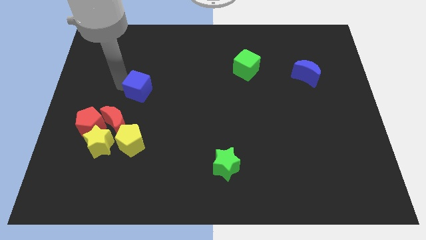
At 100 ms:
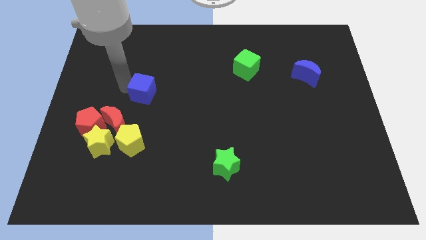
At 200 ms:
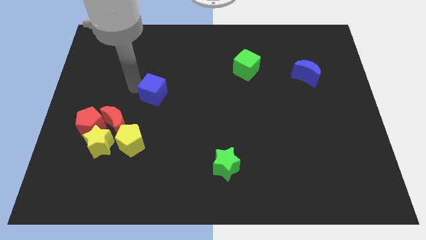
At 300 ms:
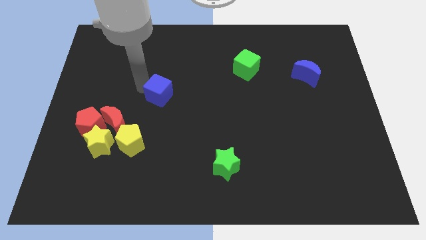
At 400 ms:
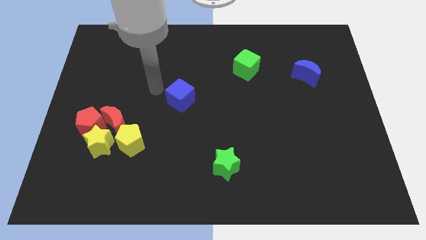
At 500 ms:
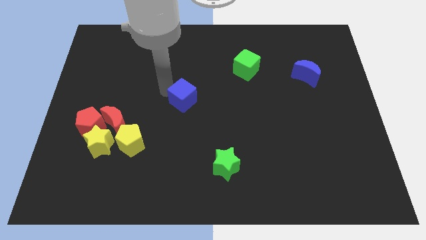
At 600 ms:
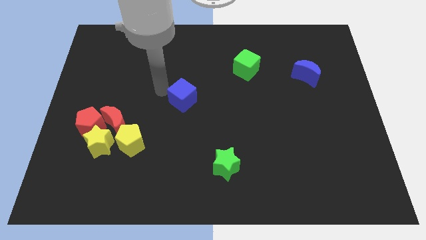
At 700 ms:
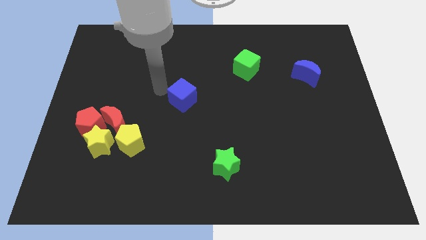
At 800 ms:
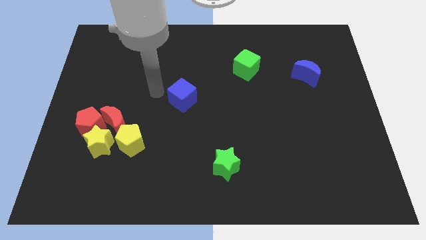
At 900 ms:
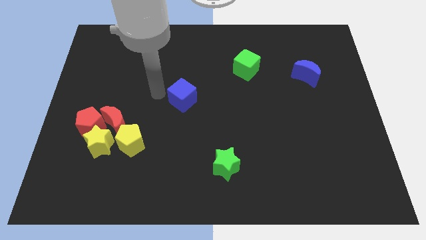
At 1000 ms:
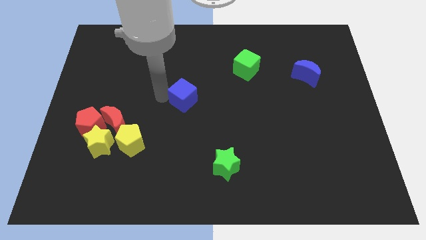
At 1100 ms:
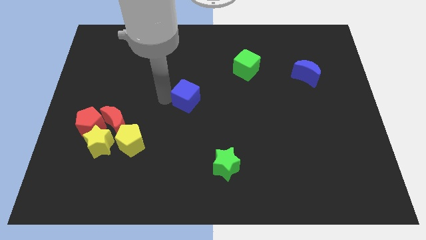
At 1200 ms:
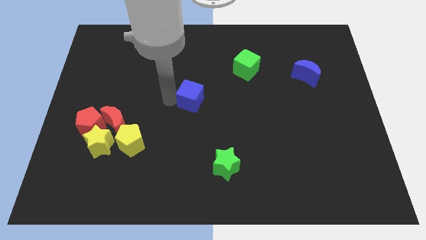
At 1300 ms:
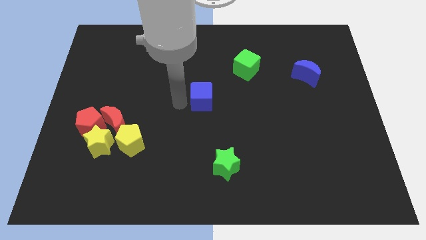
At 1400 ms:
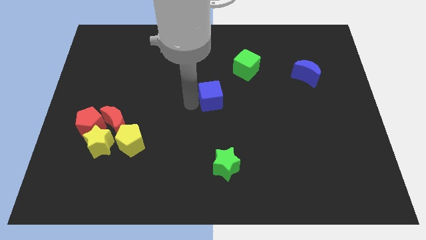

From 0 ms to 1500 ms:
push the blue cube to the center of the board

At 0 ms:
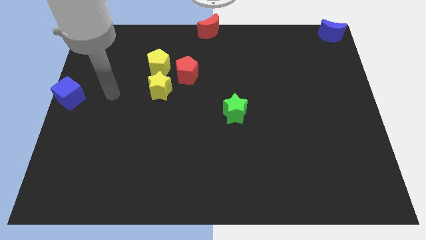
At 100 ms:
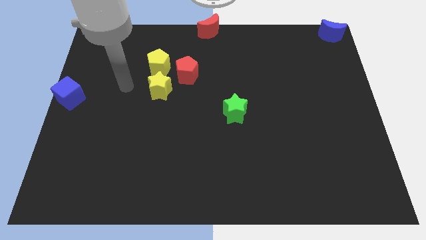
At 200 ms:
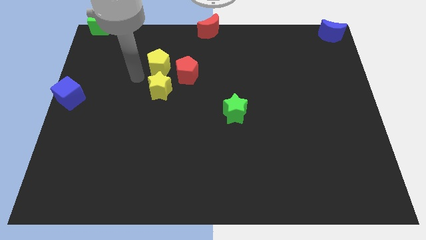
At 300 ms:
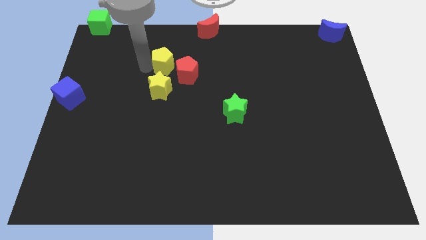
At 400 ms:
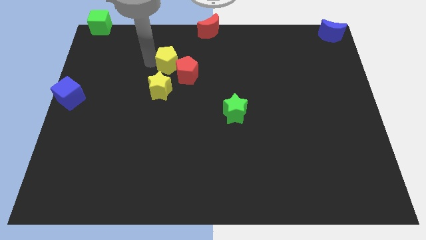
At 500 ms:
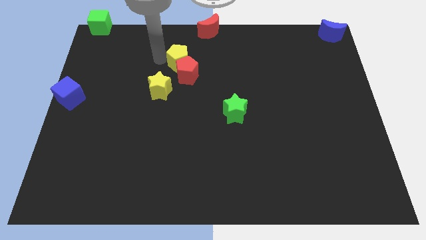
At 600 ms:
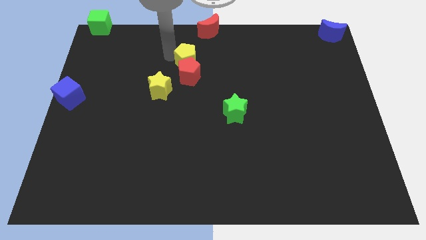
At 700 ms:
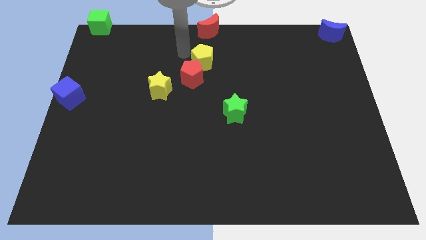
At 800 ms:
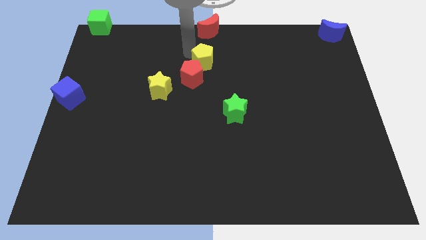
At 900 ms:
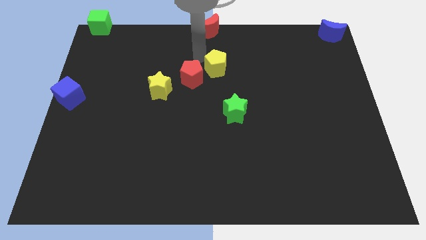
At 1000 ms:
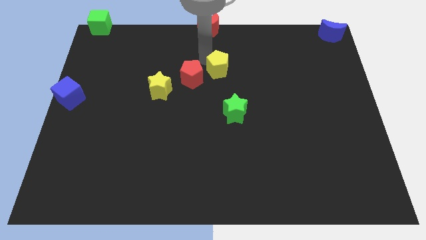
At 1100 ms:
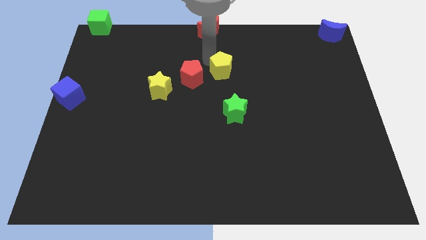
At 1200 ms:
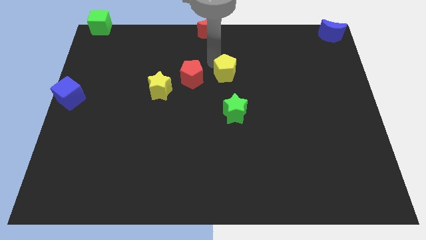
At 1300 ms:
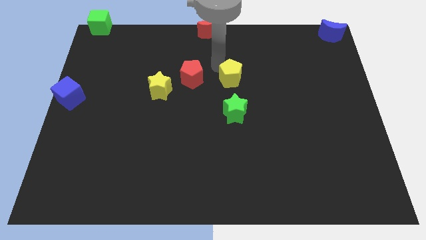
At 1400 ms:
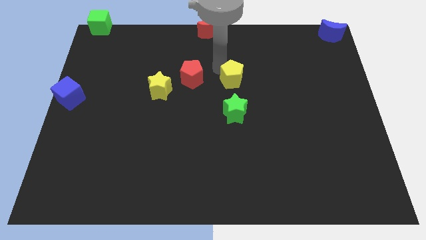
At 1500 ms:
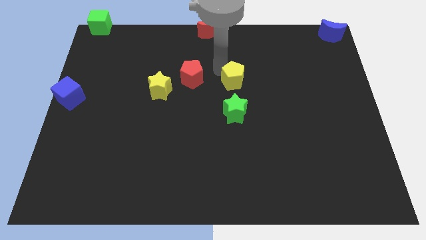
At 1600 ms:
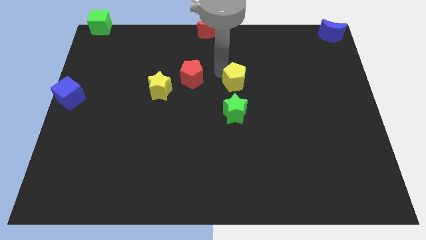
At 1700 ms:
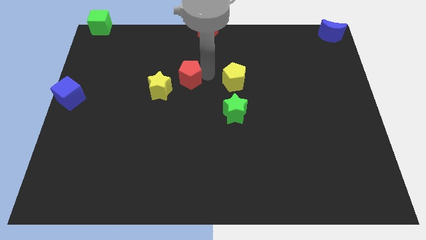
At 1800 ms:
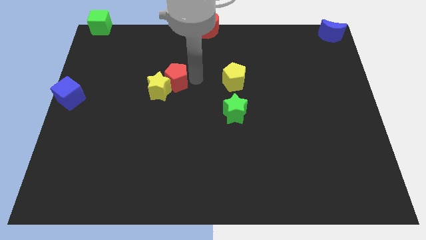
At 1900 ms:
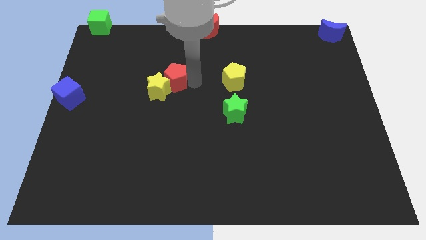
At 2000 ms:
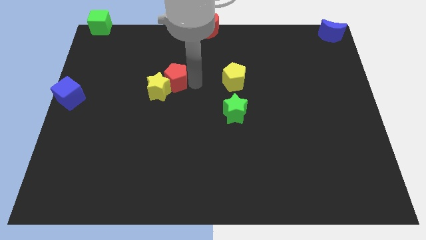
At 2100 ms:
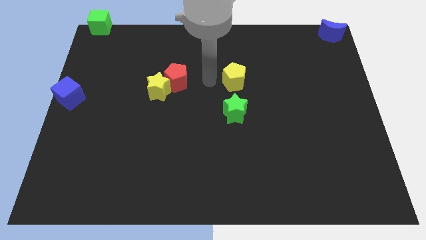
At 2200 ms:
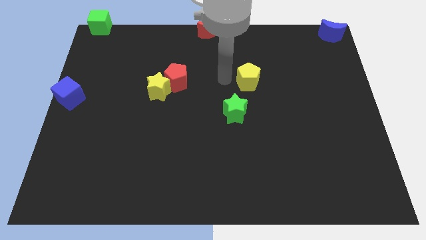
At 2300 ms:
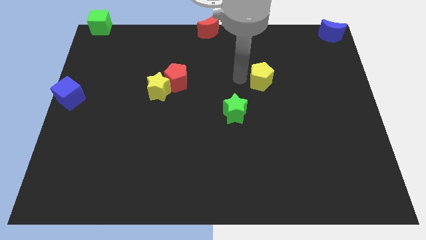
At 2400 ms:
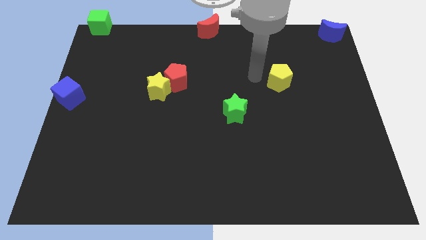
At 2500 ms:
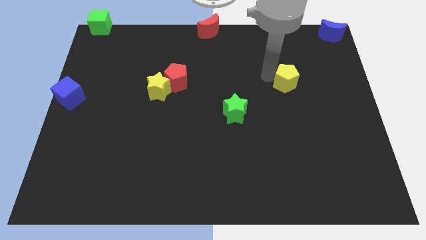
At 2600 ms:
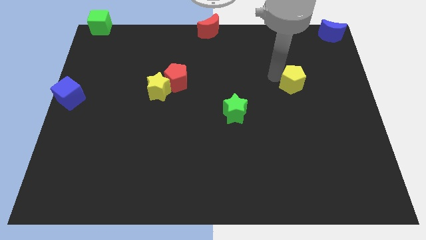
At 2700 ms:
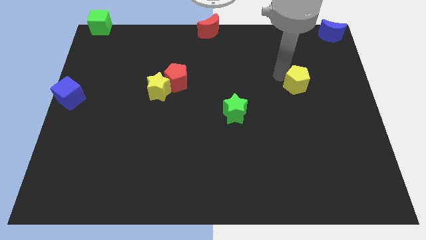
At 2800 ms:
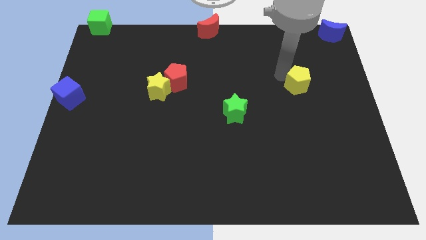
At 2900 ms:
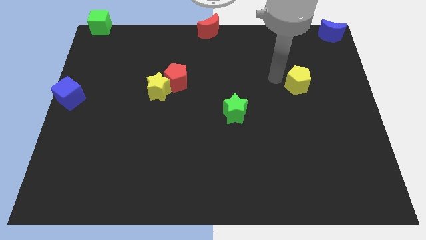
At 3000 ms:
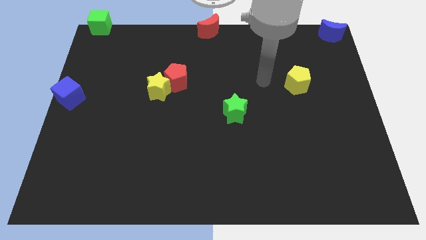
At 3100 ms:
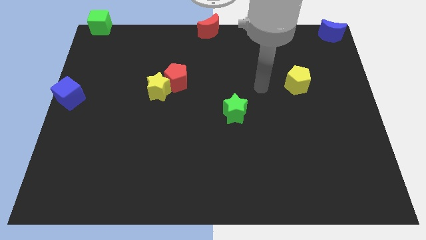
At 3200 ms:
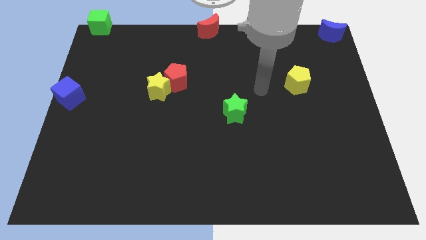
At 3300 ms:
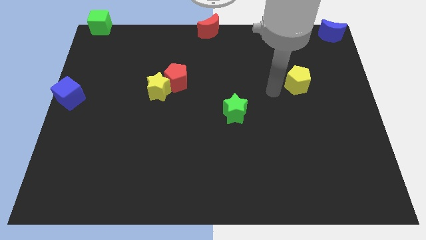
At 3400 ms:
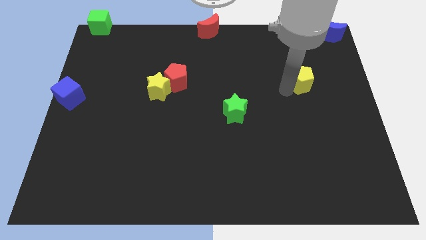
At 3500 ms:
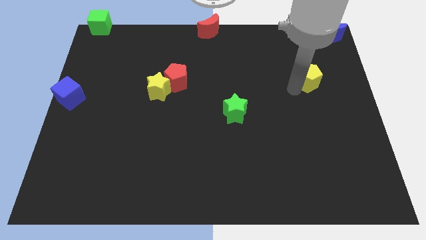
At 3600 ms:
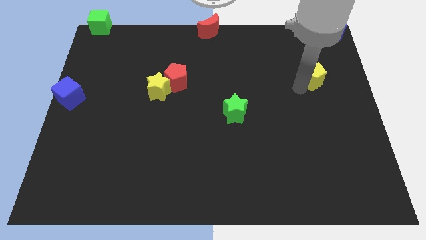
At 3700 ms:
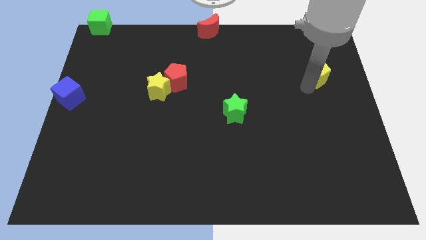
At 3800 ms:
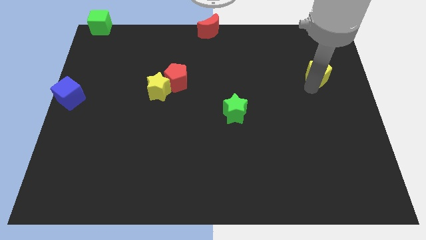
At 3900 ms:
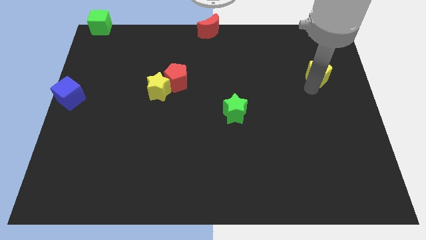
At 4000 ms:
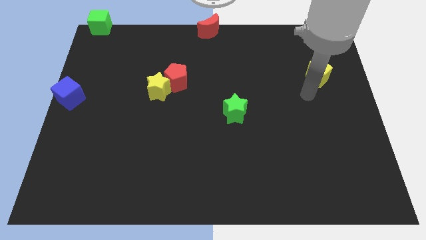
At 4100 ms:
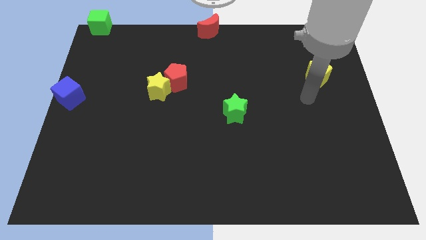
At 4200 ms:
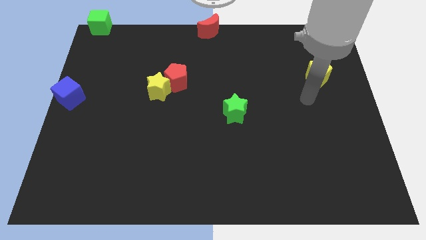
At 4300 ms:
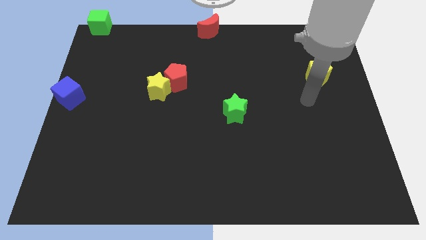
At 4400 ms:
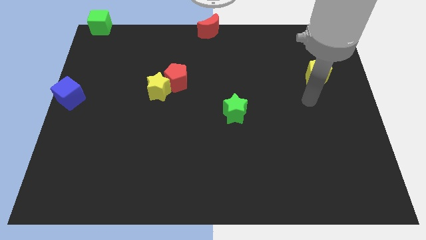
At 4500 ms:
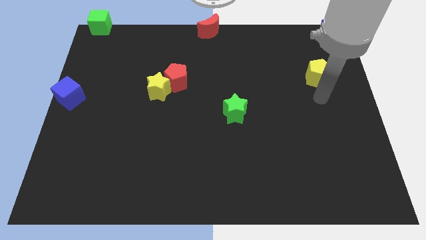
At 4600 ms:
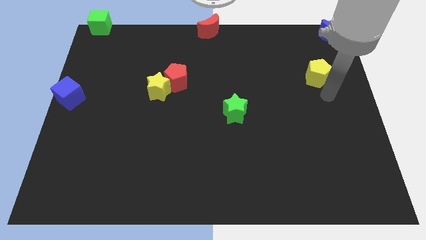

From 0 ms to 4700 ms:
push the yellow pentagon to the right

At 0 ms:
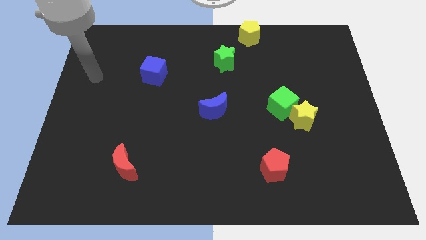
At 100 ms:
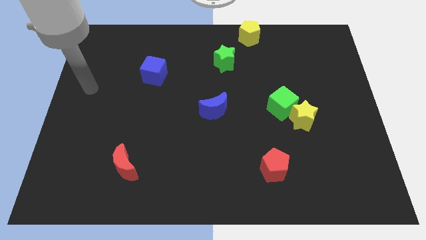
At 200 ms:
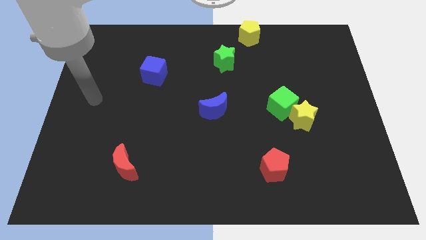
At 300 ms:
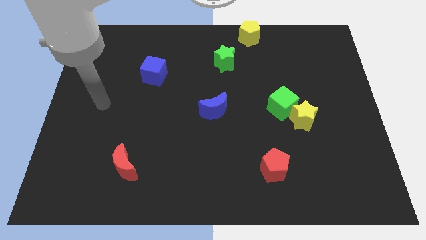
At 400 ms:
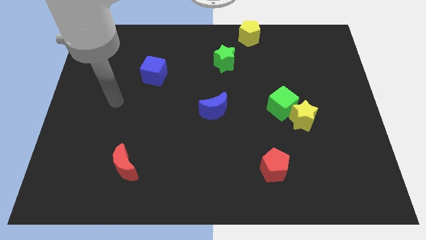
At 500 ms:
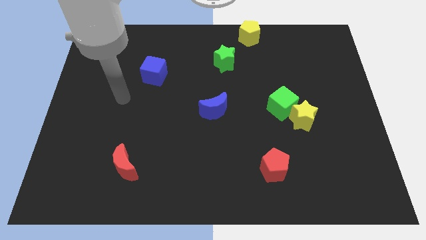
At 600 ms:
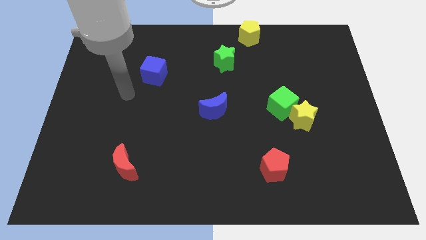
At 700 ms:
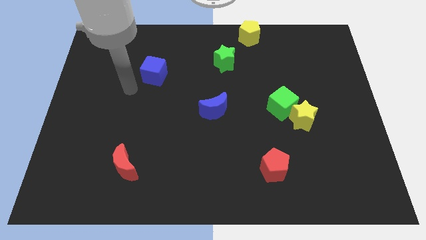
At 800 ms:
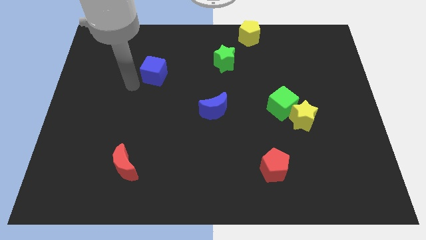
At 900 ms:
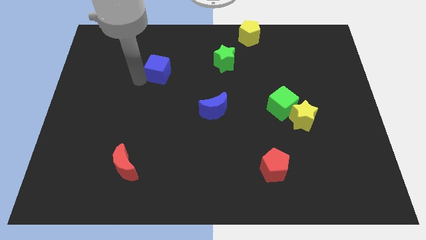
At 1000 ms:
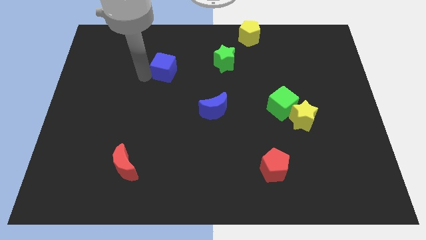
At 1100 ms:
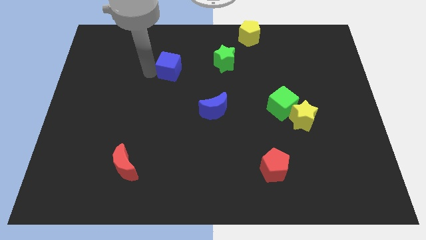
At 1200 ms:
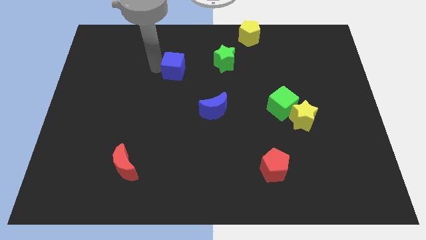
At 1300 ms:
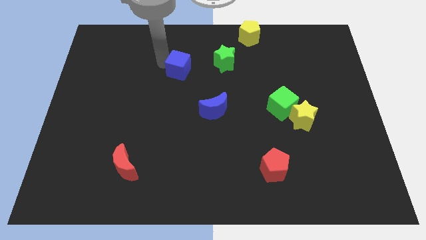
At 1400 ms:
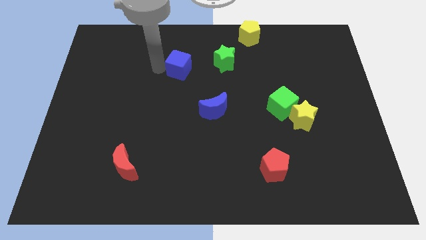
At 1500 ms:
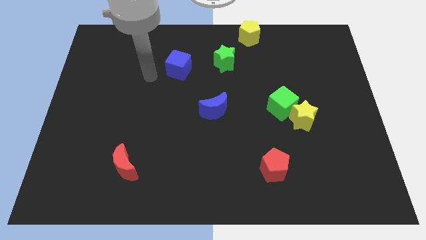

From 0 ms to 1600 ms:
push the blue moon towards the green star

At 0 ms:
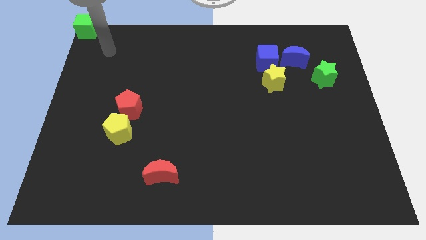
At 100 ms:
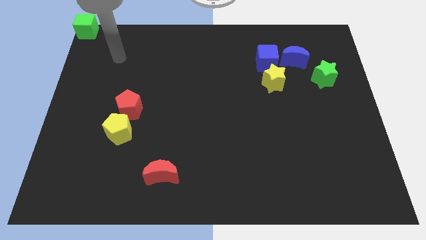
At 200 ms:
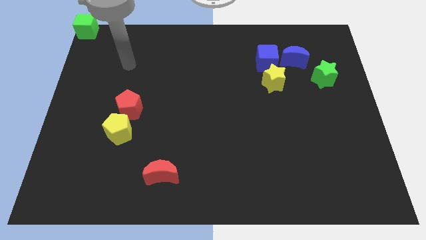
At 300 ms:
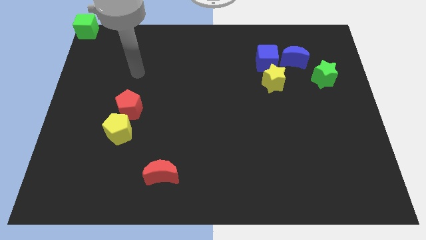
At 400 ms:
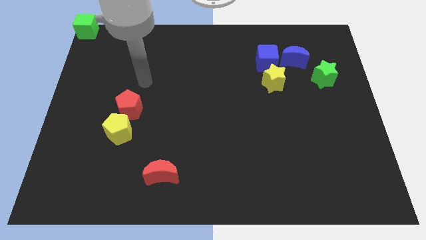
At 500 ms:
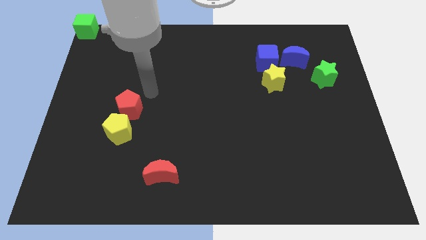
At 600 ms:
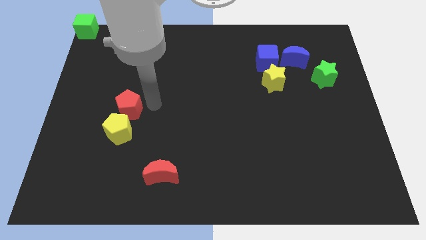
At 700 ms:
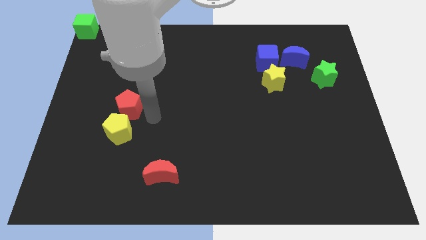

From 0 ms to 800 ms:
move the arm towards the right of the red pentagon

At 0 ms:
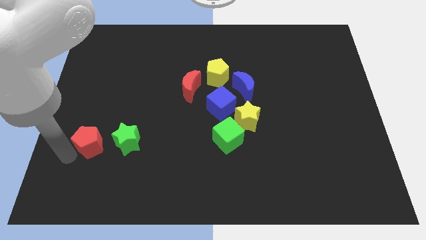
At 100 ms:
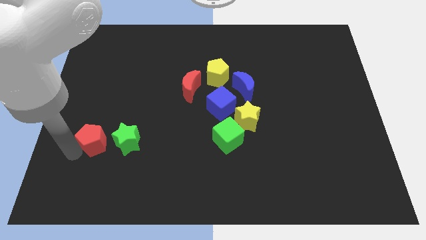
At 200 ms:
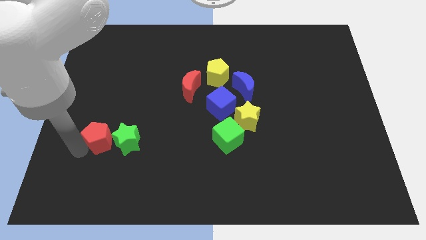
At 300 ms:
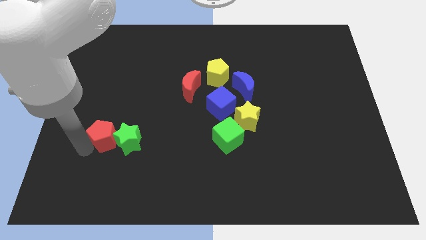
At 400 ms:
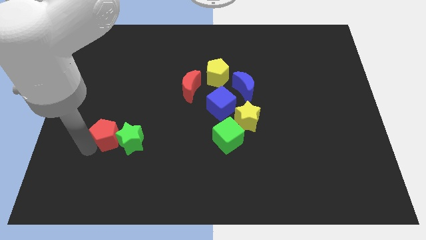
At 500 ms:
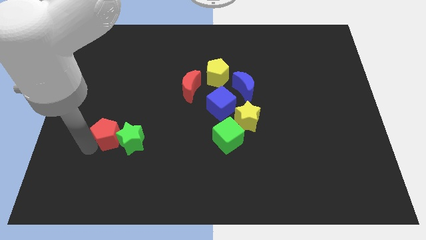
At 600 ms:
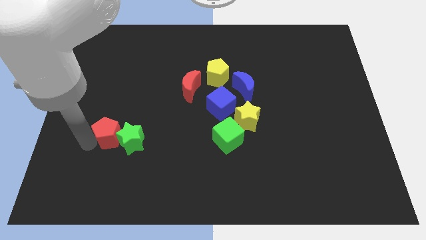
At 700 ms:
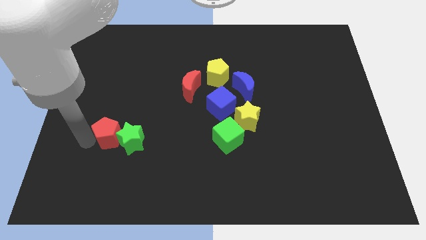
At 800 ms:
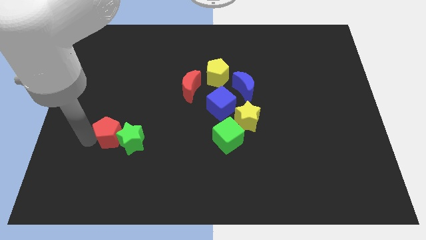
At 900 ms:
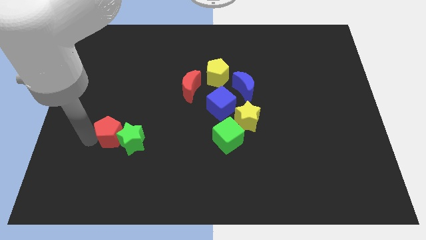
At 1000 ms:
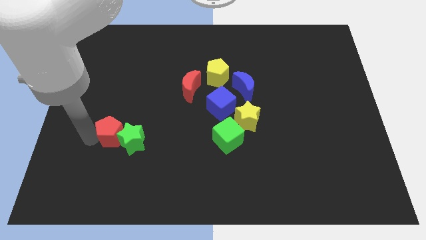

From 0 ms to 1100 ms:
push the red pentagon to the left of the green star
